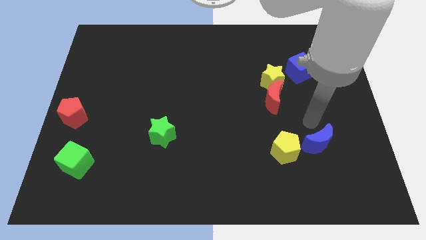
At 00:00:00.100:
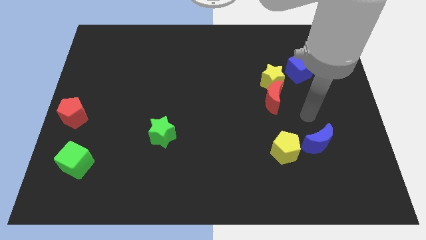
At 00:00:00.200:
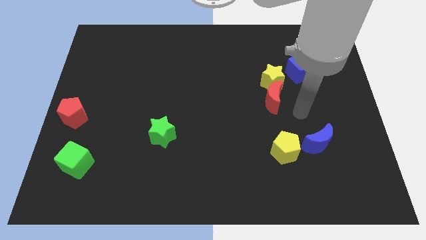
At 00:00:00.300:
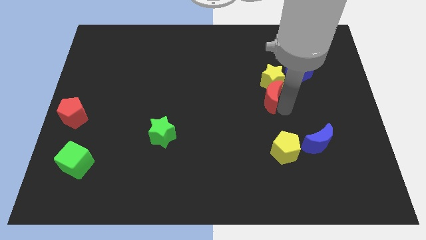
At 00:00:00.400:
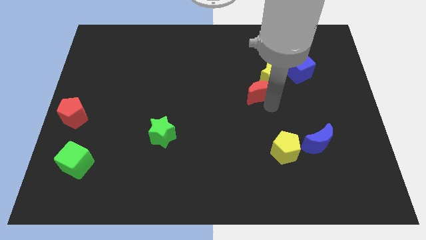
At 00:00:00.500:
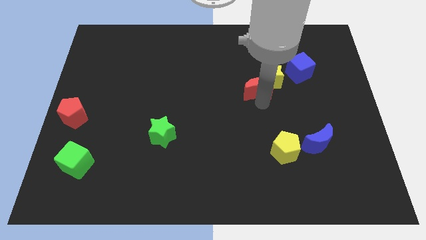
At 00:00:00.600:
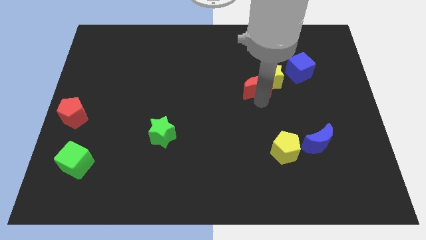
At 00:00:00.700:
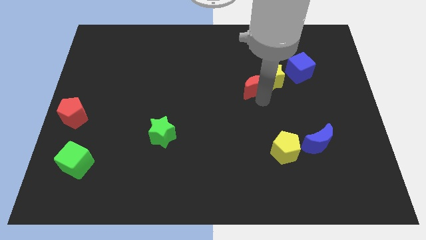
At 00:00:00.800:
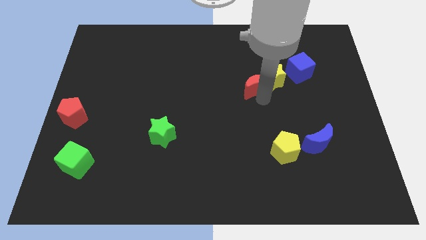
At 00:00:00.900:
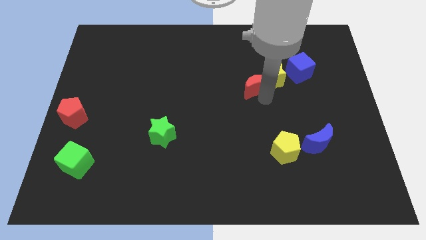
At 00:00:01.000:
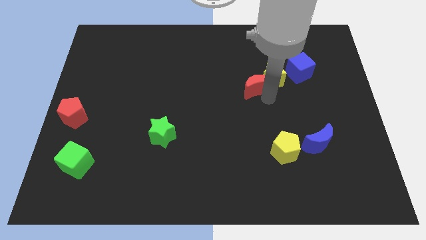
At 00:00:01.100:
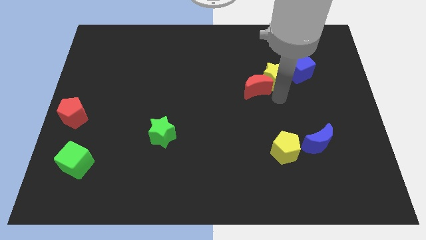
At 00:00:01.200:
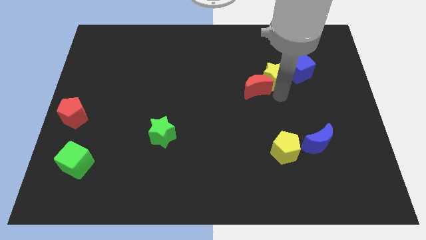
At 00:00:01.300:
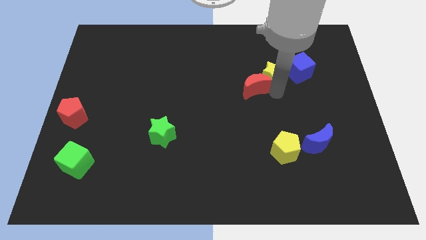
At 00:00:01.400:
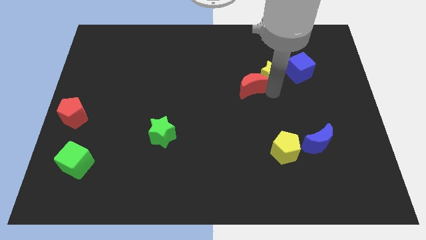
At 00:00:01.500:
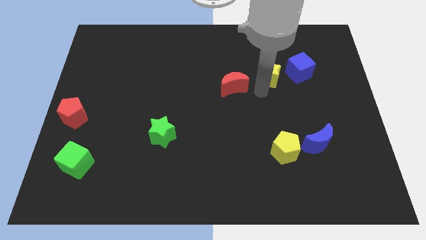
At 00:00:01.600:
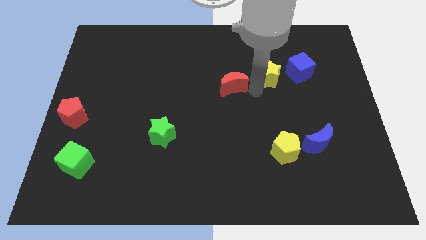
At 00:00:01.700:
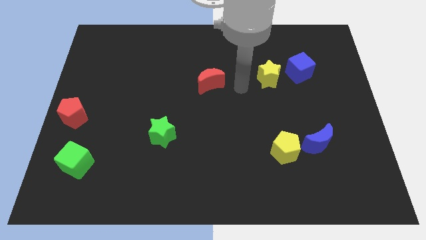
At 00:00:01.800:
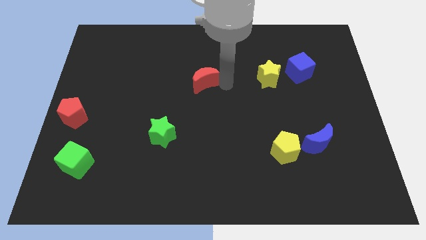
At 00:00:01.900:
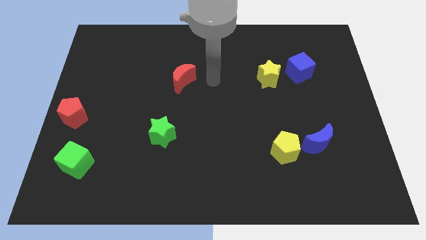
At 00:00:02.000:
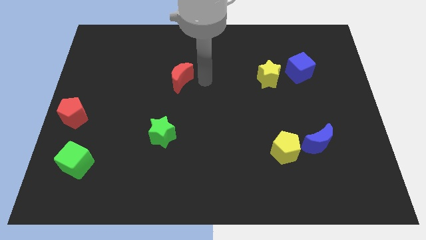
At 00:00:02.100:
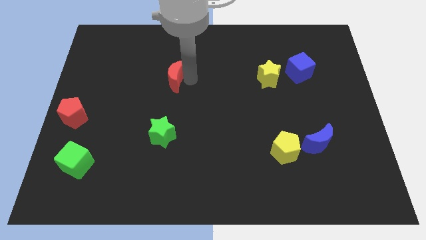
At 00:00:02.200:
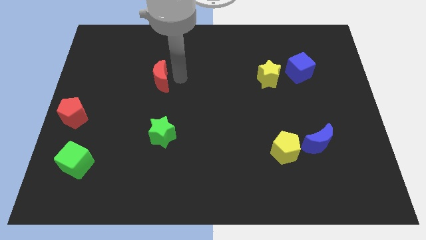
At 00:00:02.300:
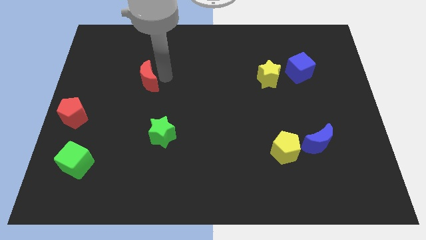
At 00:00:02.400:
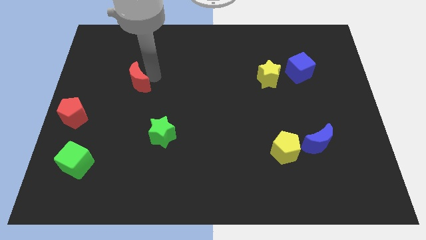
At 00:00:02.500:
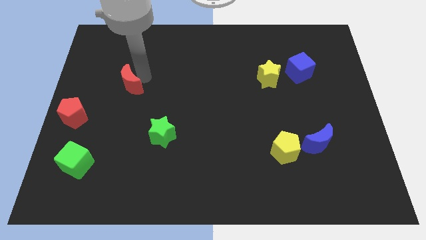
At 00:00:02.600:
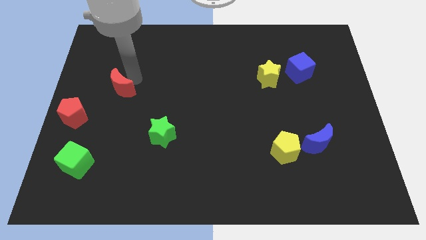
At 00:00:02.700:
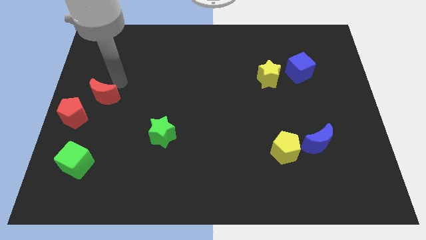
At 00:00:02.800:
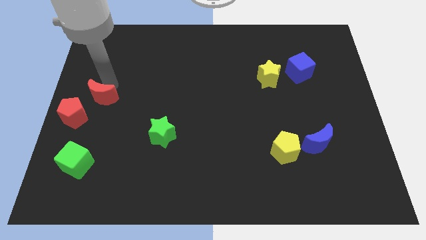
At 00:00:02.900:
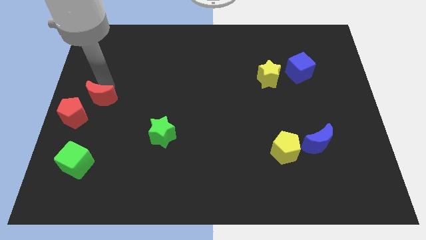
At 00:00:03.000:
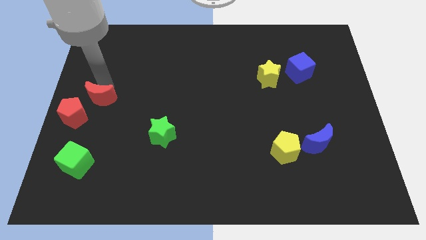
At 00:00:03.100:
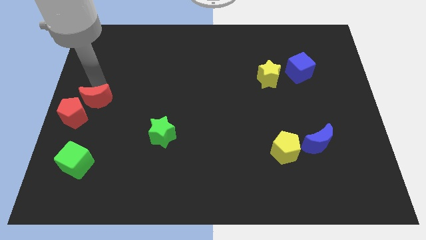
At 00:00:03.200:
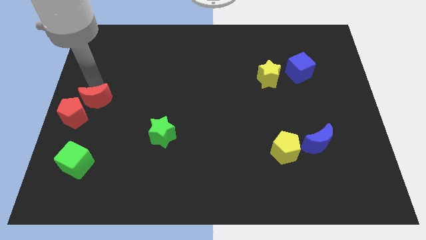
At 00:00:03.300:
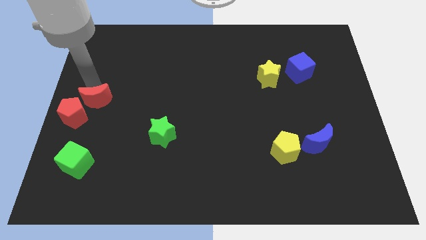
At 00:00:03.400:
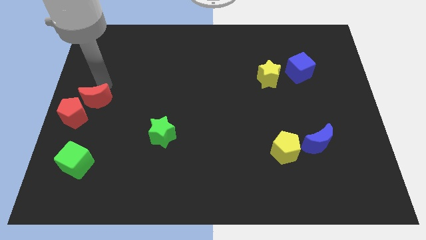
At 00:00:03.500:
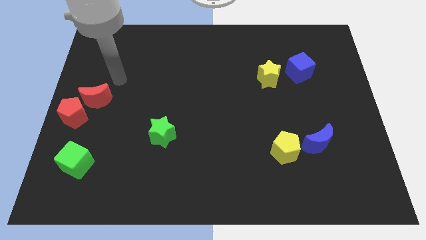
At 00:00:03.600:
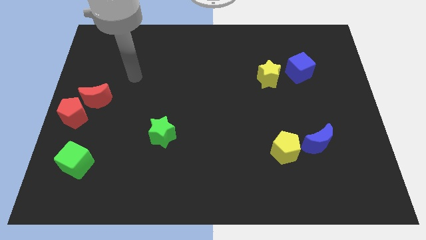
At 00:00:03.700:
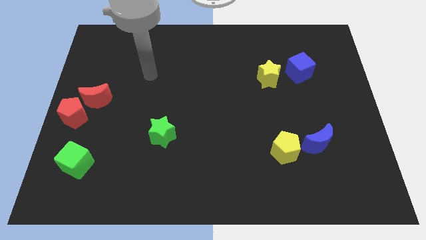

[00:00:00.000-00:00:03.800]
separate the red moon from the yellow star

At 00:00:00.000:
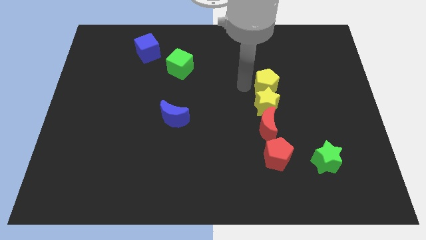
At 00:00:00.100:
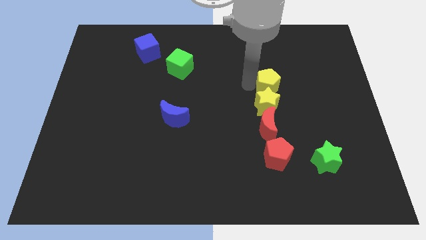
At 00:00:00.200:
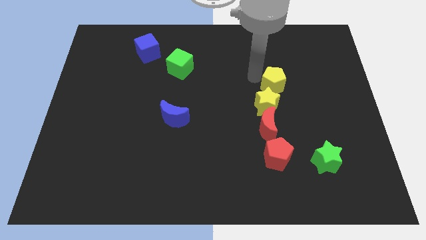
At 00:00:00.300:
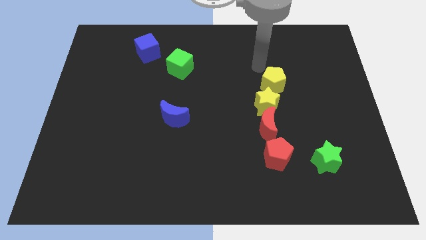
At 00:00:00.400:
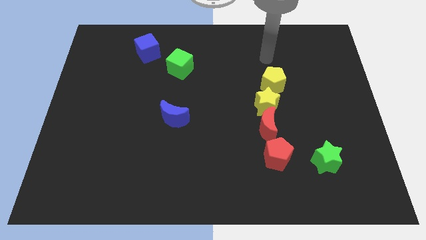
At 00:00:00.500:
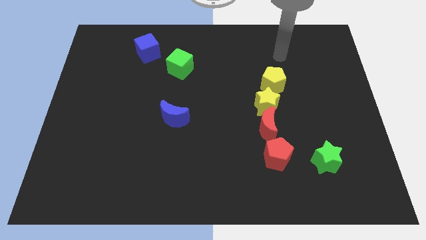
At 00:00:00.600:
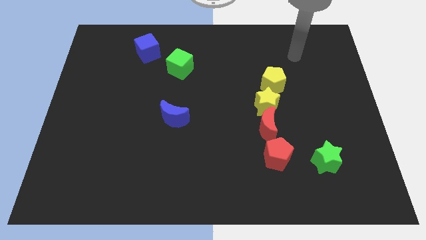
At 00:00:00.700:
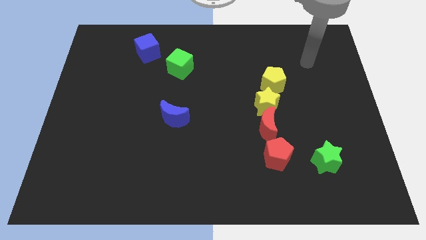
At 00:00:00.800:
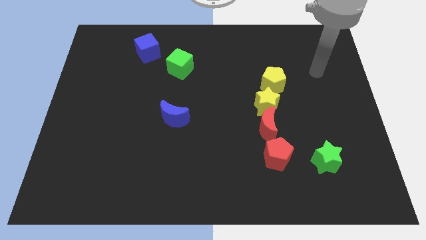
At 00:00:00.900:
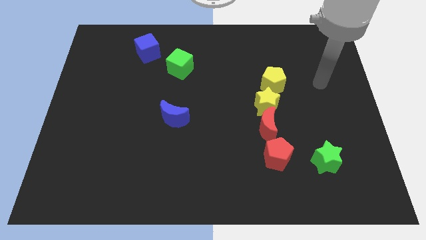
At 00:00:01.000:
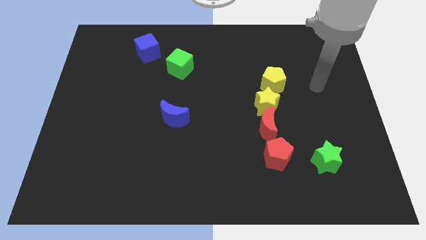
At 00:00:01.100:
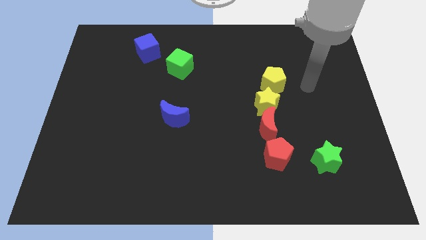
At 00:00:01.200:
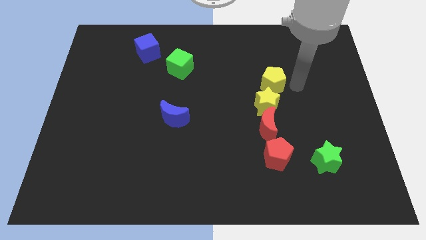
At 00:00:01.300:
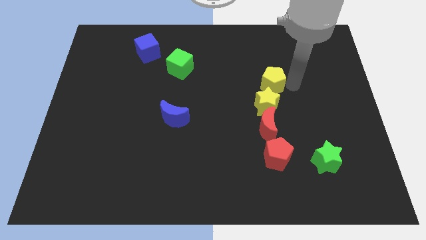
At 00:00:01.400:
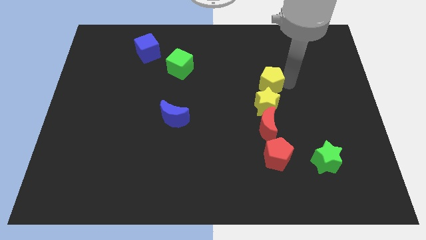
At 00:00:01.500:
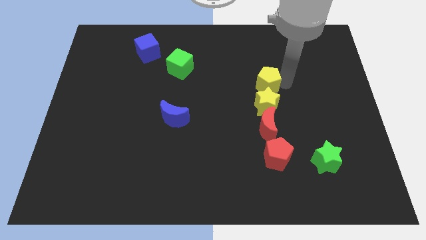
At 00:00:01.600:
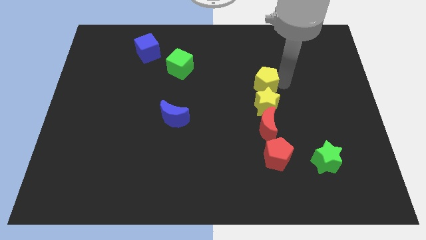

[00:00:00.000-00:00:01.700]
move the yellow pentagon towards left

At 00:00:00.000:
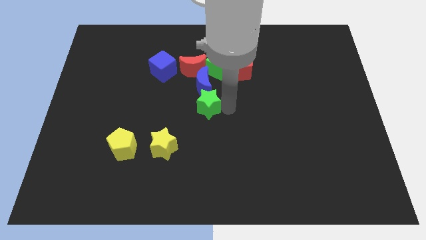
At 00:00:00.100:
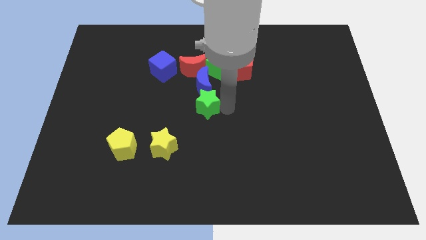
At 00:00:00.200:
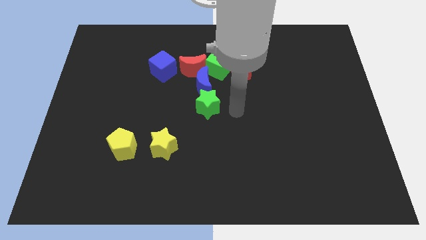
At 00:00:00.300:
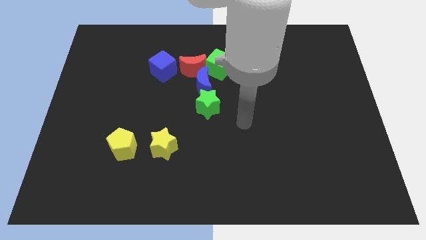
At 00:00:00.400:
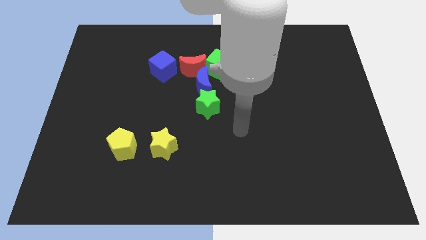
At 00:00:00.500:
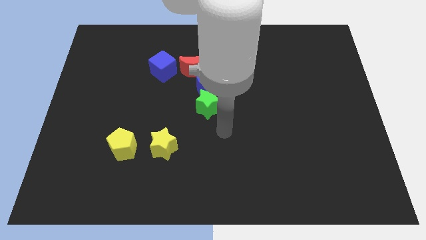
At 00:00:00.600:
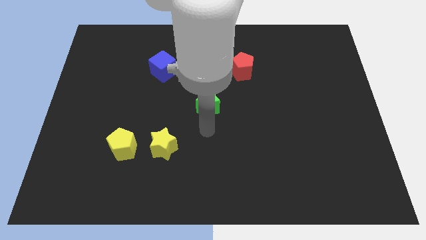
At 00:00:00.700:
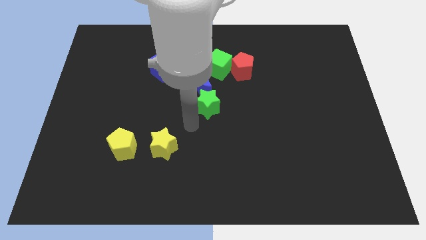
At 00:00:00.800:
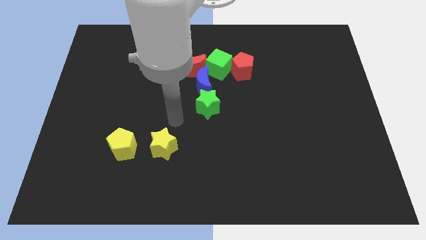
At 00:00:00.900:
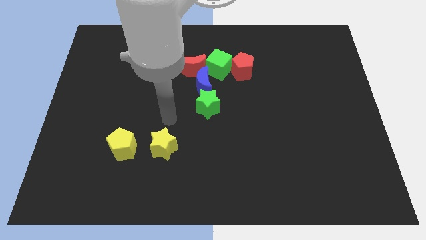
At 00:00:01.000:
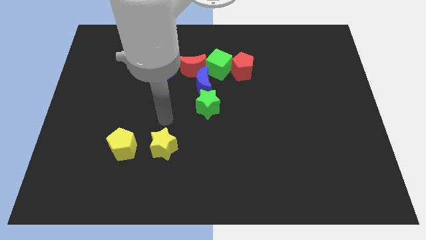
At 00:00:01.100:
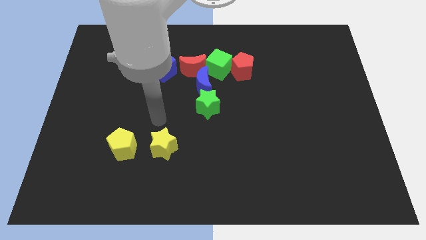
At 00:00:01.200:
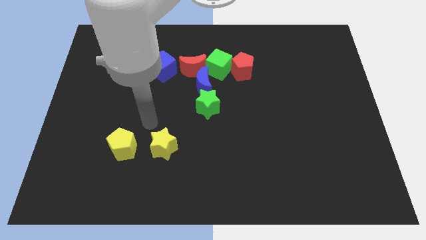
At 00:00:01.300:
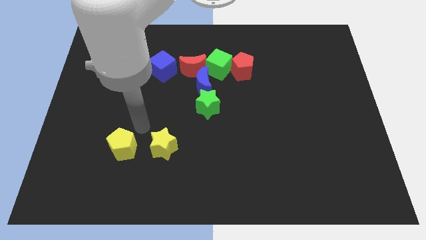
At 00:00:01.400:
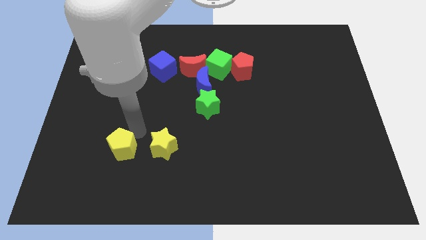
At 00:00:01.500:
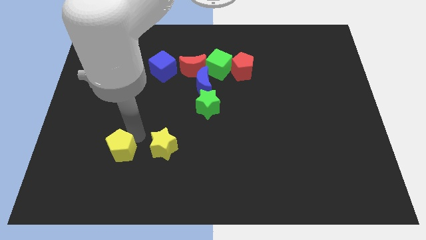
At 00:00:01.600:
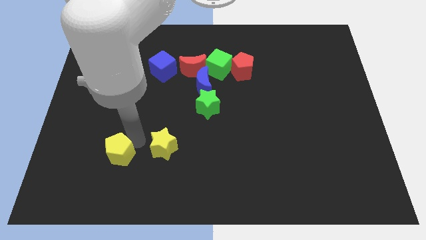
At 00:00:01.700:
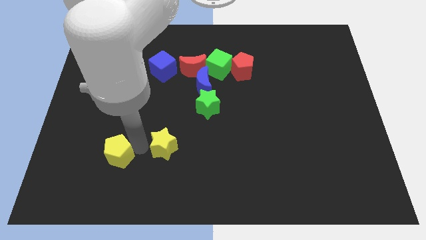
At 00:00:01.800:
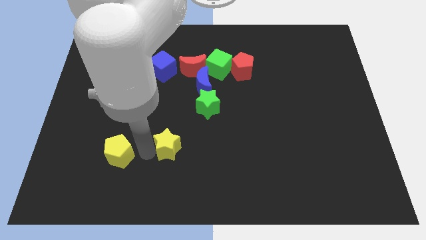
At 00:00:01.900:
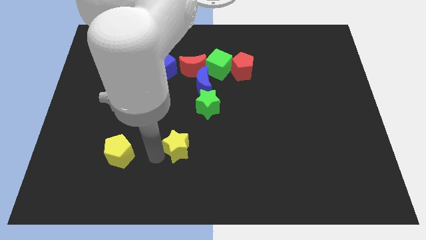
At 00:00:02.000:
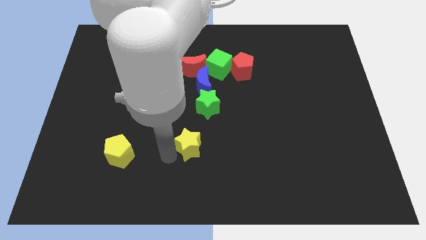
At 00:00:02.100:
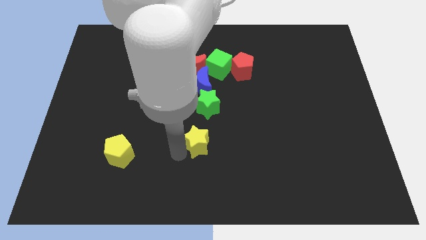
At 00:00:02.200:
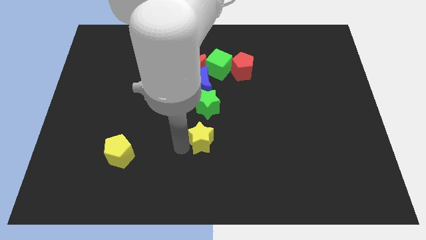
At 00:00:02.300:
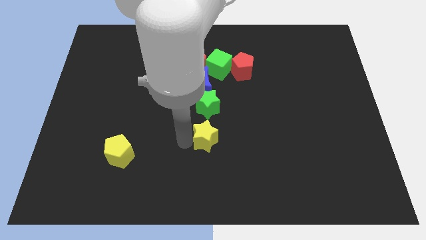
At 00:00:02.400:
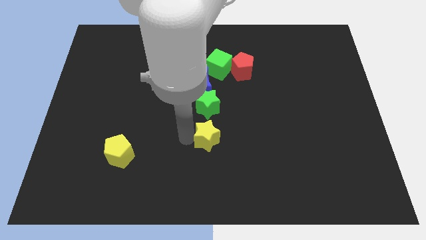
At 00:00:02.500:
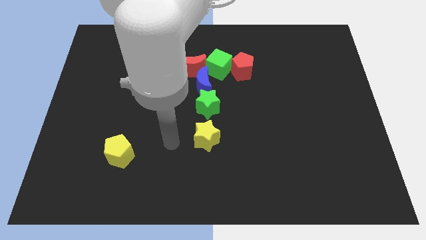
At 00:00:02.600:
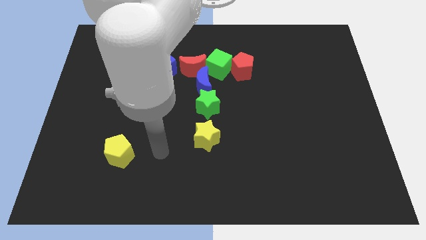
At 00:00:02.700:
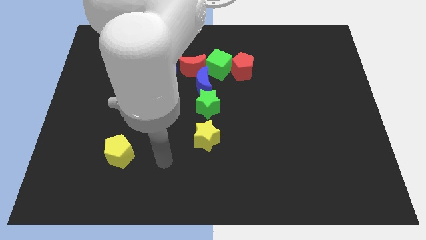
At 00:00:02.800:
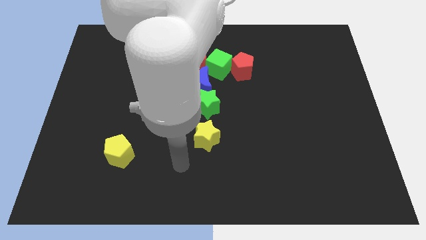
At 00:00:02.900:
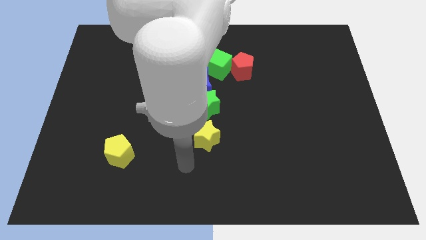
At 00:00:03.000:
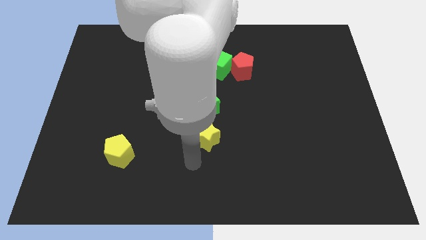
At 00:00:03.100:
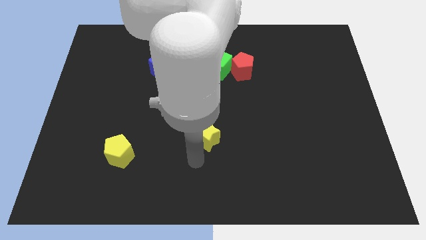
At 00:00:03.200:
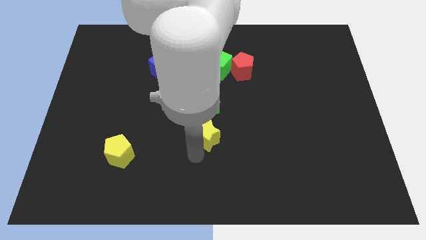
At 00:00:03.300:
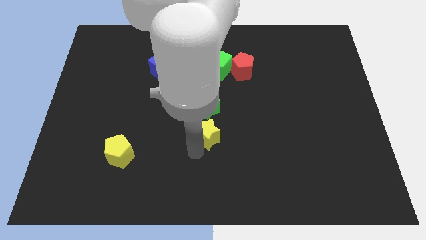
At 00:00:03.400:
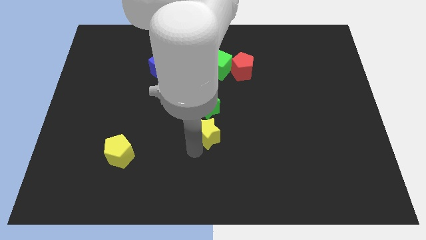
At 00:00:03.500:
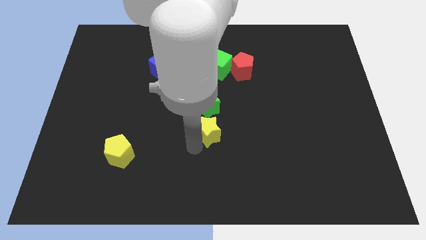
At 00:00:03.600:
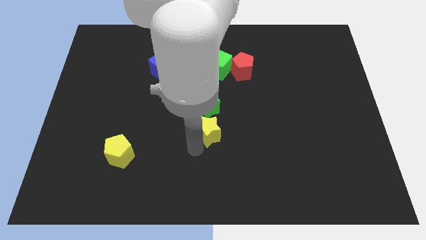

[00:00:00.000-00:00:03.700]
place the yellow star below the green star
